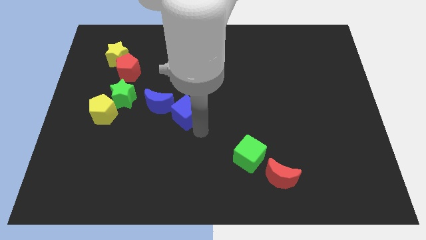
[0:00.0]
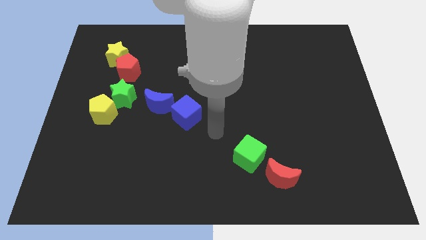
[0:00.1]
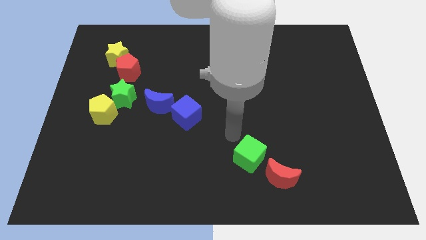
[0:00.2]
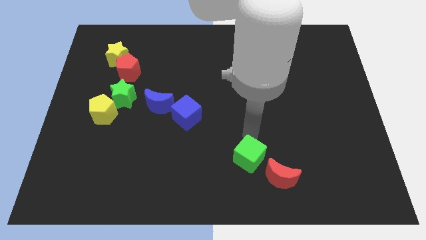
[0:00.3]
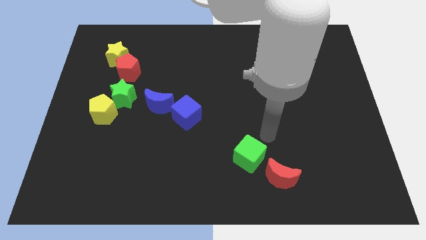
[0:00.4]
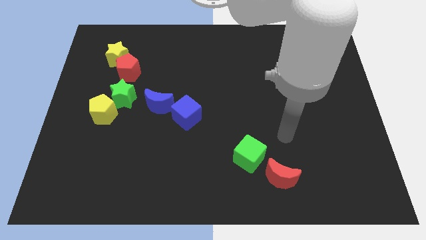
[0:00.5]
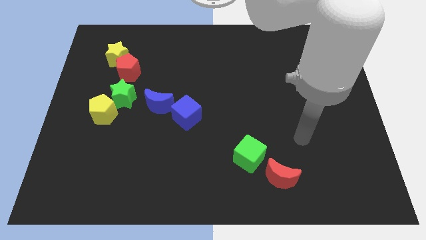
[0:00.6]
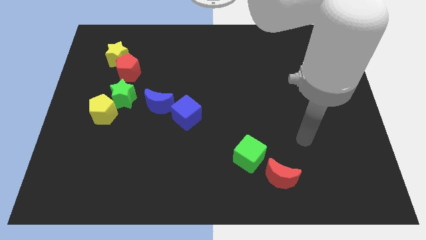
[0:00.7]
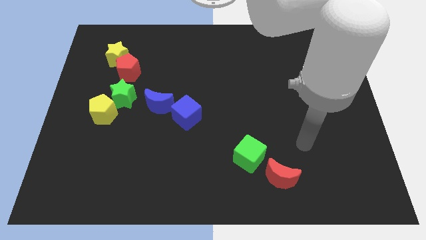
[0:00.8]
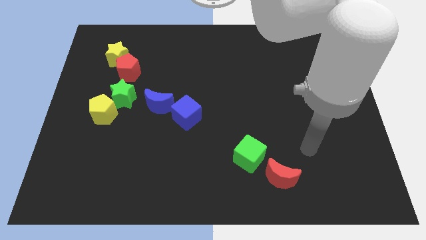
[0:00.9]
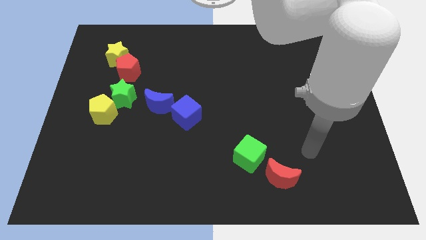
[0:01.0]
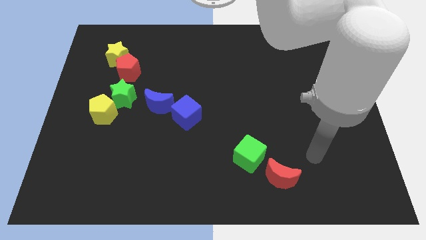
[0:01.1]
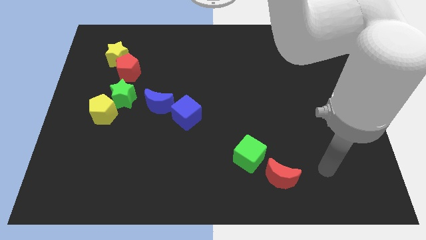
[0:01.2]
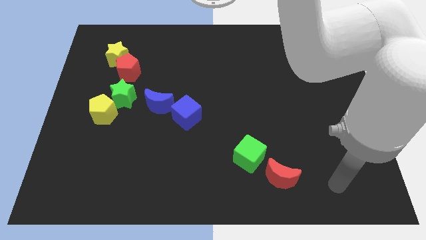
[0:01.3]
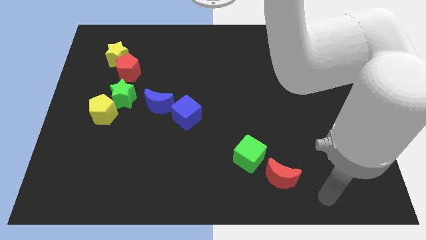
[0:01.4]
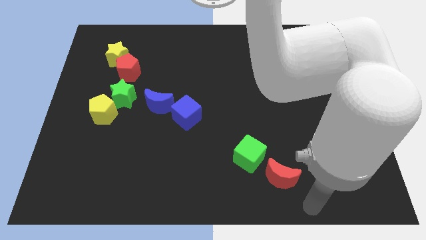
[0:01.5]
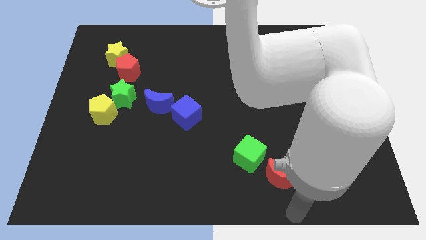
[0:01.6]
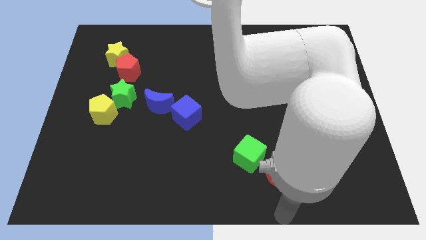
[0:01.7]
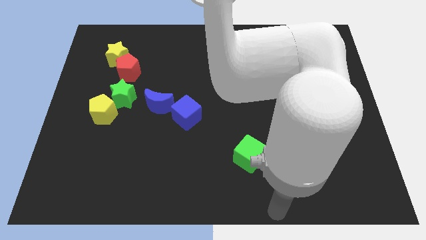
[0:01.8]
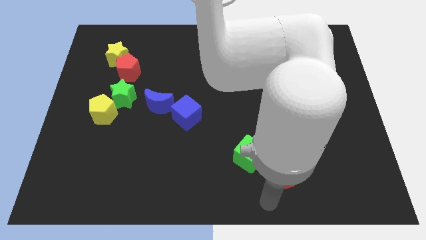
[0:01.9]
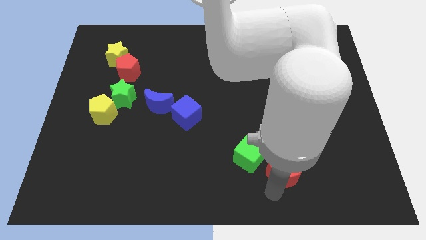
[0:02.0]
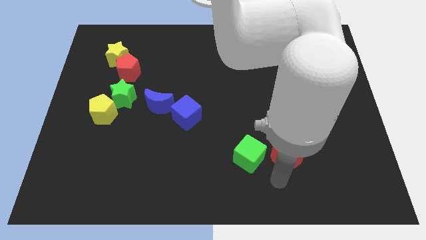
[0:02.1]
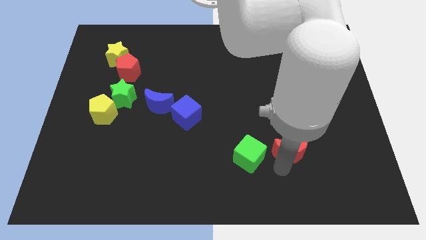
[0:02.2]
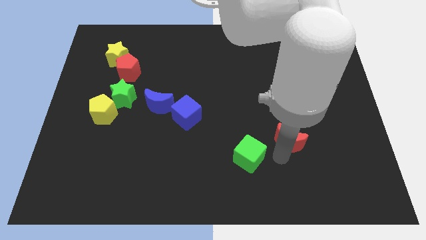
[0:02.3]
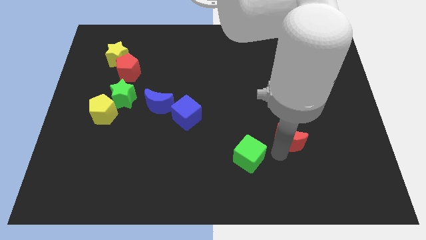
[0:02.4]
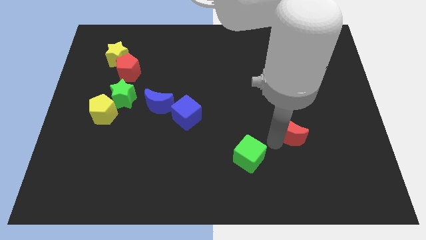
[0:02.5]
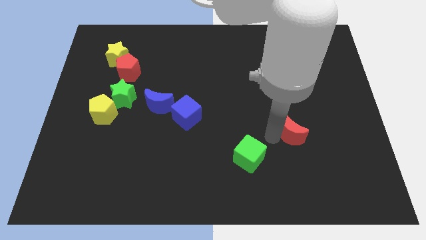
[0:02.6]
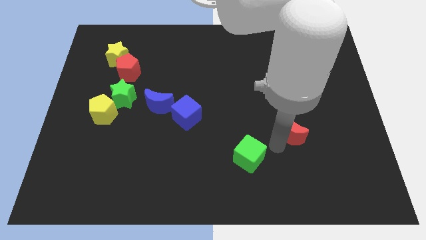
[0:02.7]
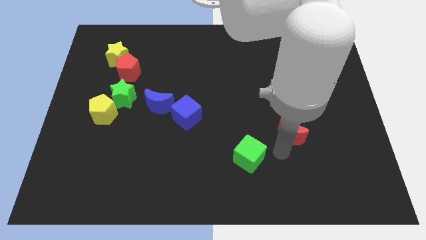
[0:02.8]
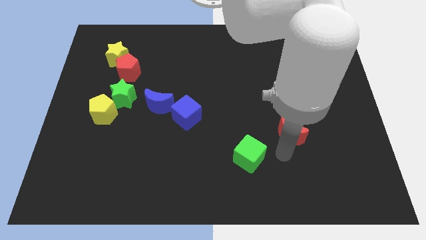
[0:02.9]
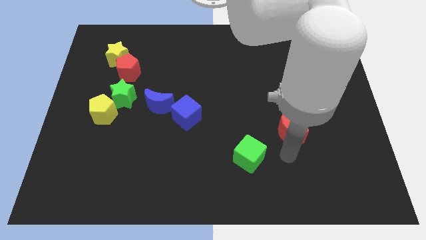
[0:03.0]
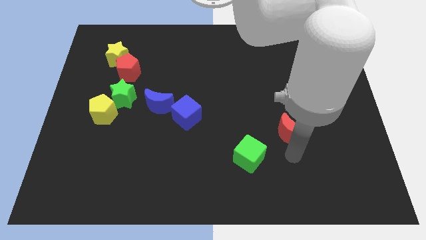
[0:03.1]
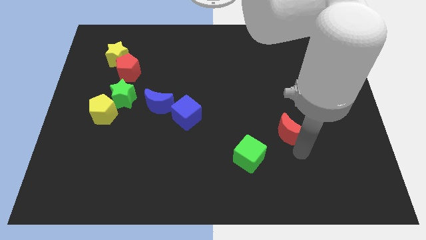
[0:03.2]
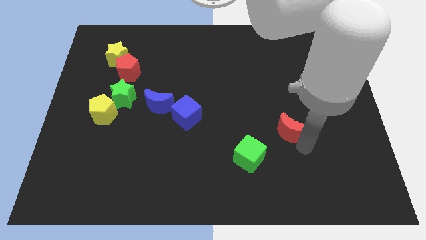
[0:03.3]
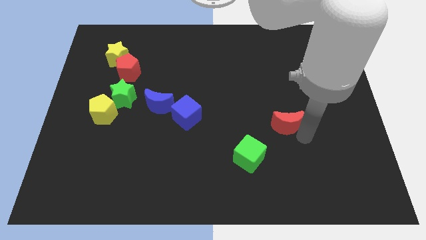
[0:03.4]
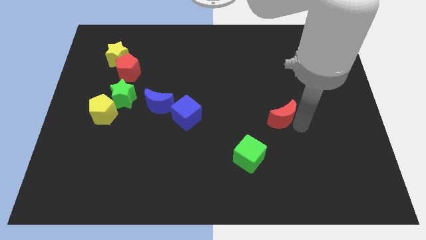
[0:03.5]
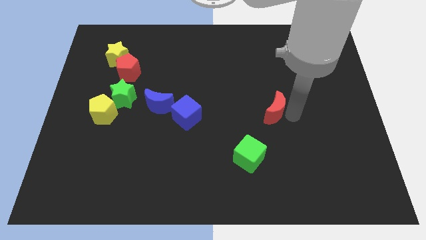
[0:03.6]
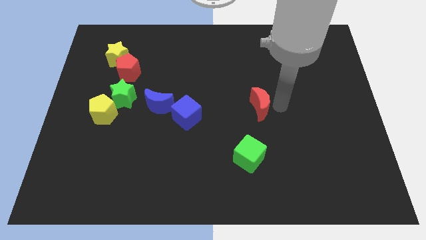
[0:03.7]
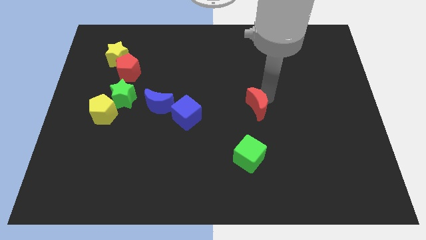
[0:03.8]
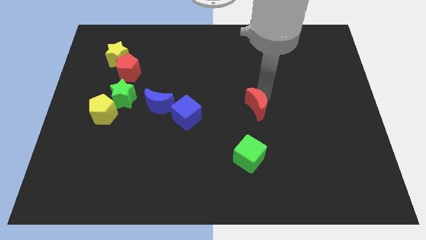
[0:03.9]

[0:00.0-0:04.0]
slide the red moon to the top of the green cube

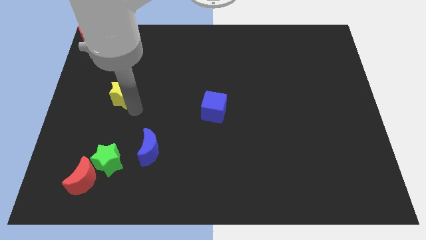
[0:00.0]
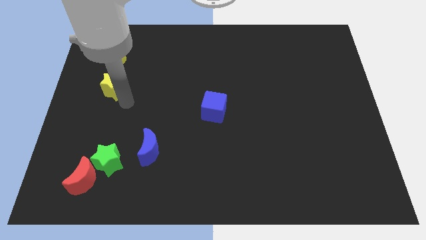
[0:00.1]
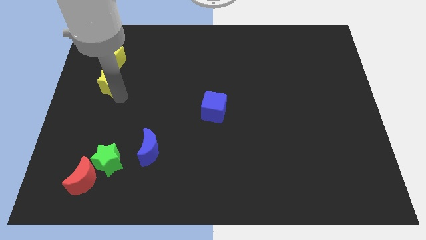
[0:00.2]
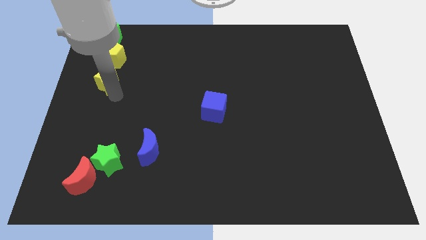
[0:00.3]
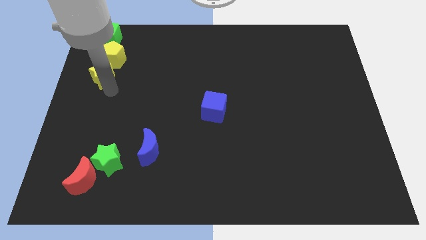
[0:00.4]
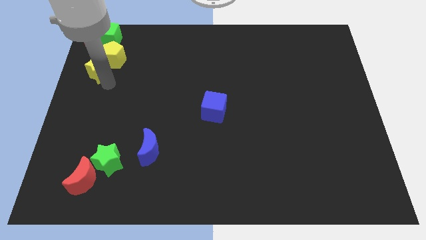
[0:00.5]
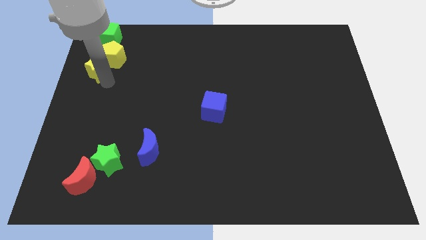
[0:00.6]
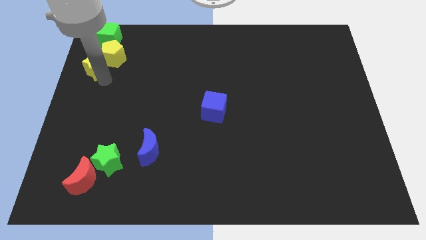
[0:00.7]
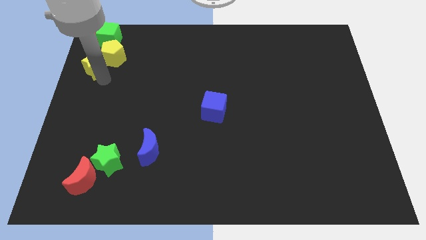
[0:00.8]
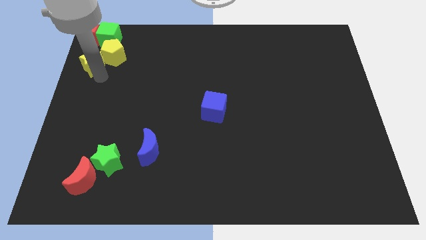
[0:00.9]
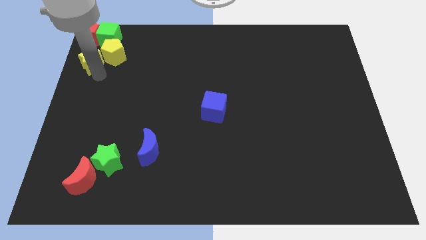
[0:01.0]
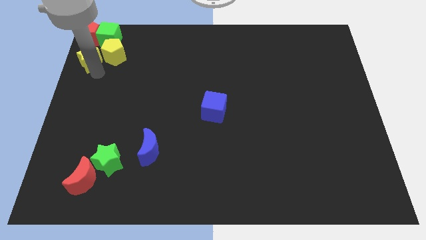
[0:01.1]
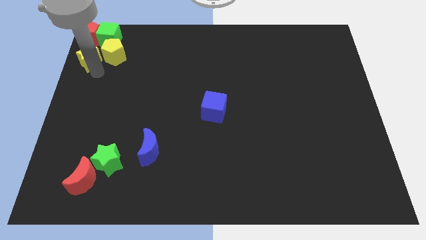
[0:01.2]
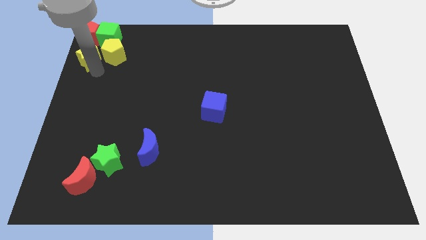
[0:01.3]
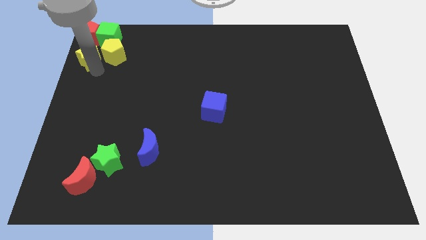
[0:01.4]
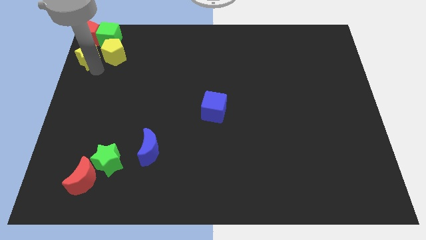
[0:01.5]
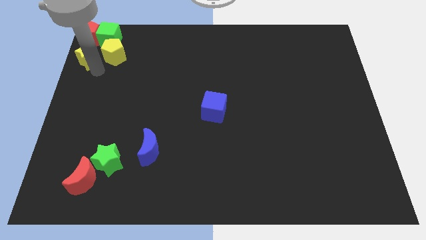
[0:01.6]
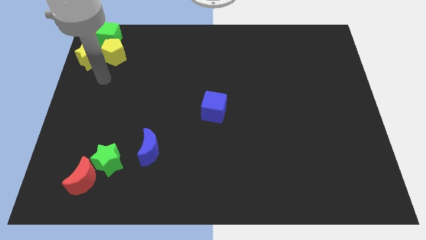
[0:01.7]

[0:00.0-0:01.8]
place the yellow star to the left of the yellow pentagon

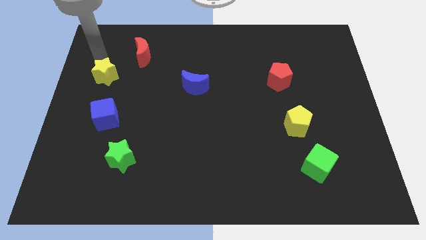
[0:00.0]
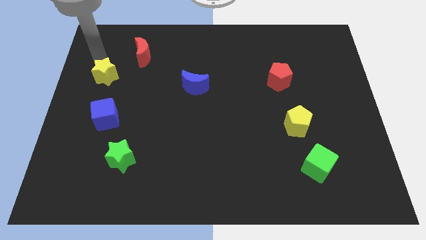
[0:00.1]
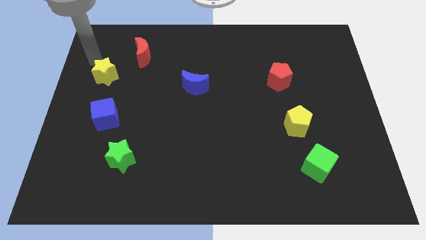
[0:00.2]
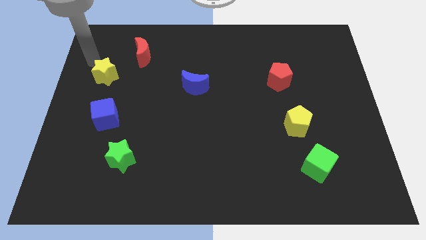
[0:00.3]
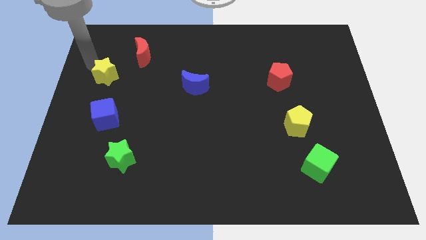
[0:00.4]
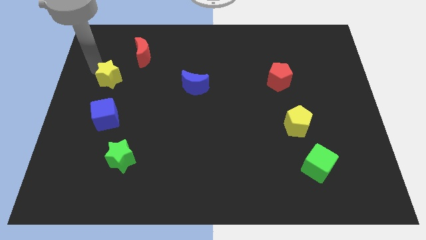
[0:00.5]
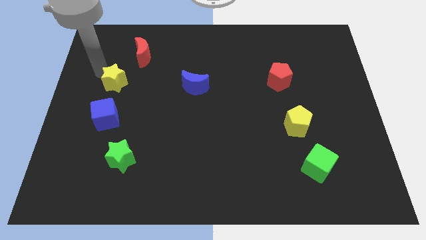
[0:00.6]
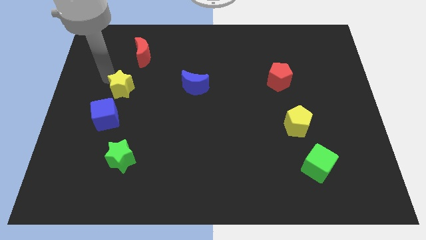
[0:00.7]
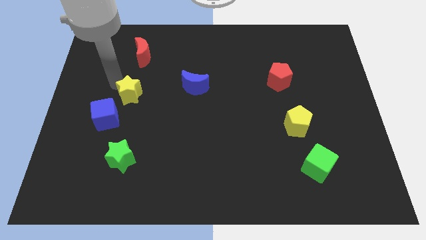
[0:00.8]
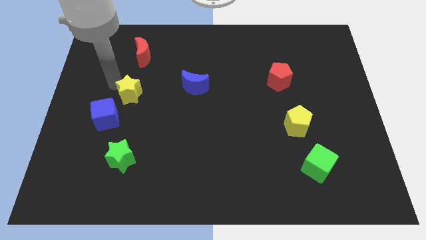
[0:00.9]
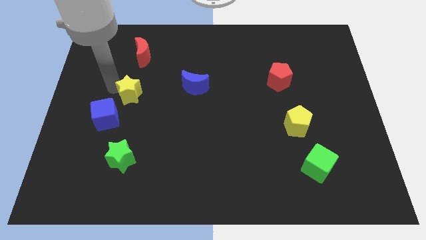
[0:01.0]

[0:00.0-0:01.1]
place the yellow star below the red crescent

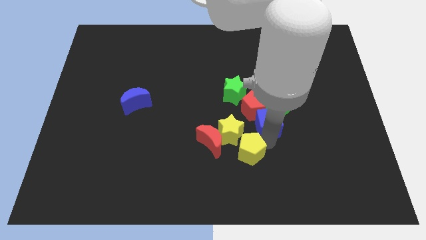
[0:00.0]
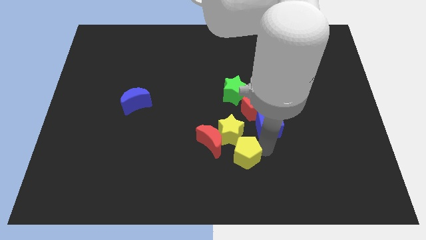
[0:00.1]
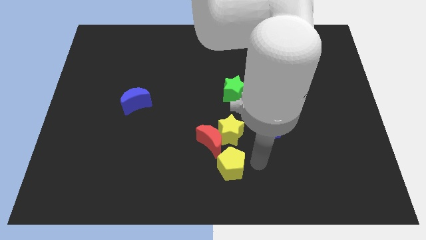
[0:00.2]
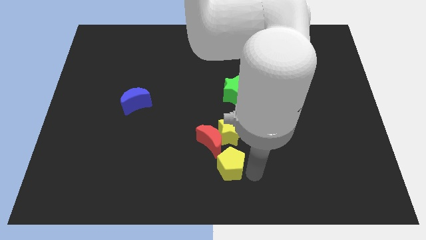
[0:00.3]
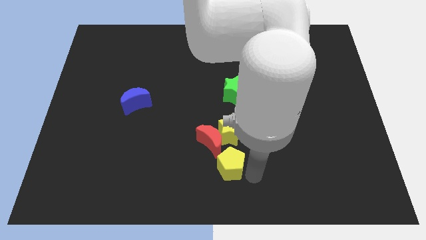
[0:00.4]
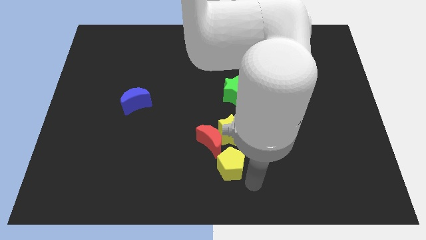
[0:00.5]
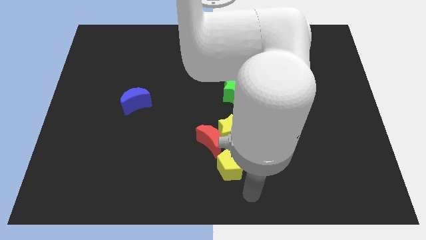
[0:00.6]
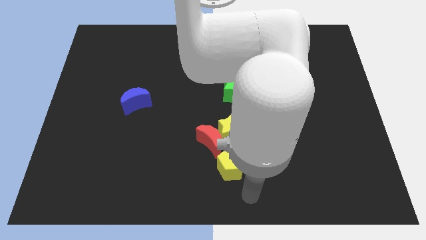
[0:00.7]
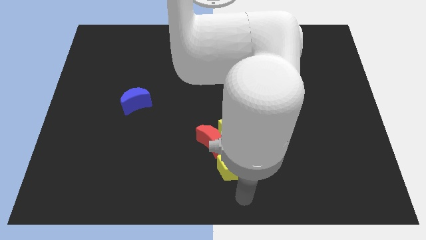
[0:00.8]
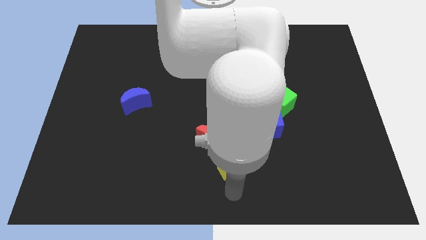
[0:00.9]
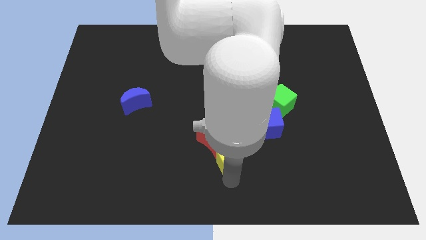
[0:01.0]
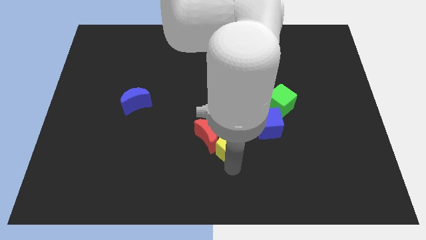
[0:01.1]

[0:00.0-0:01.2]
drag the yellow pentagon to the bottom side of the yellow star

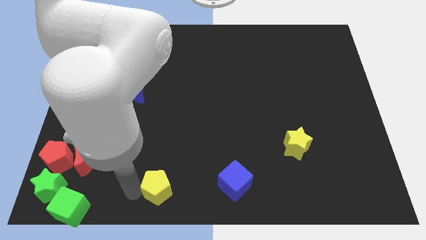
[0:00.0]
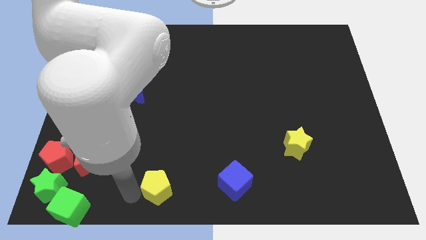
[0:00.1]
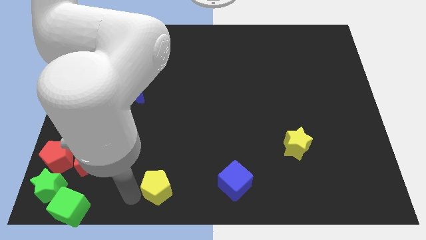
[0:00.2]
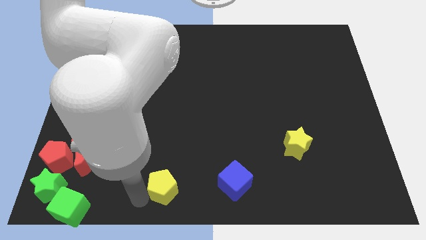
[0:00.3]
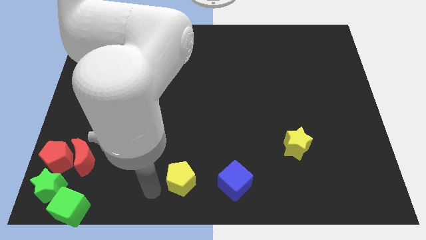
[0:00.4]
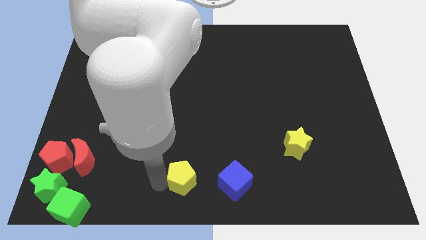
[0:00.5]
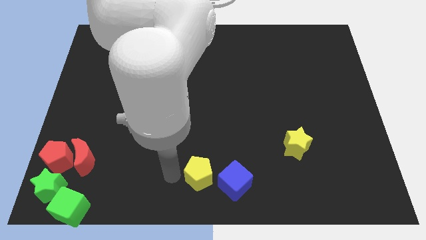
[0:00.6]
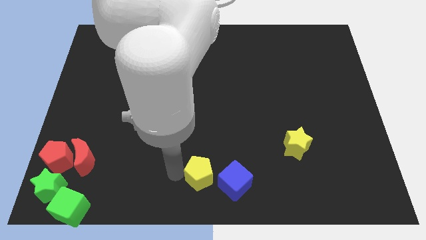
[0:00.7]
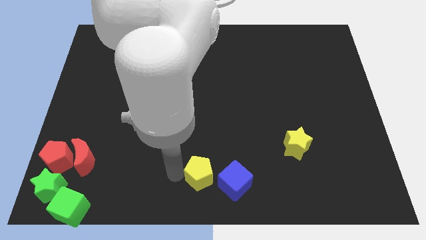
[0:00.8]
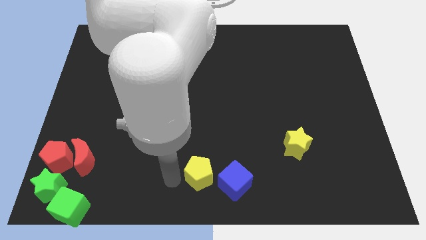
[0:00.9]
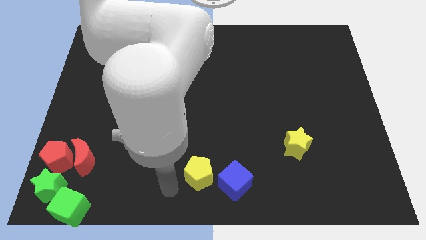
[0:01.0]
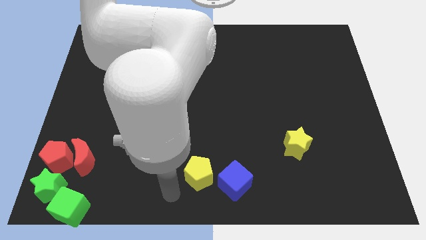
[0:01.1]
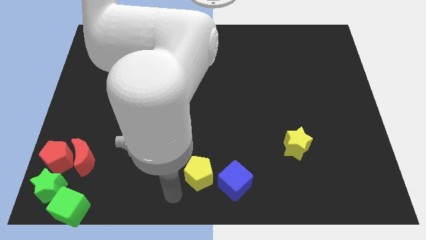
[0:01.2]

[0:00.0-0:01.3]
place the yellow pentagon diagonally to the left of the blue cube
